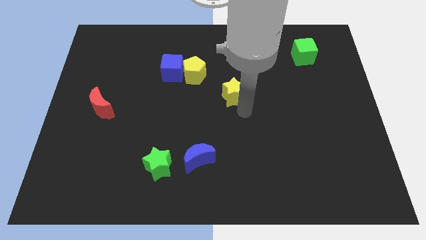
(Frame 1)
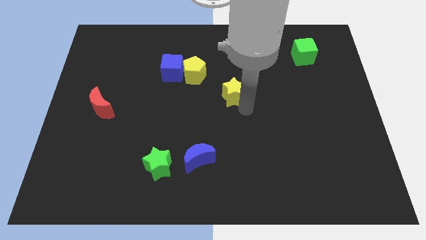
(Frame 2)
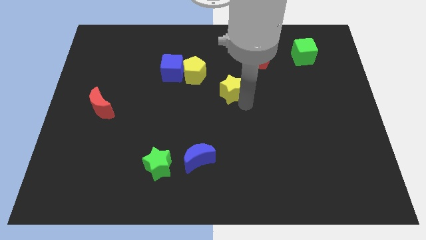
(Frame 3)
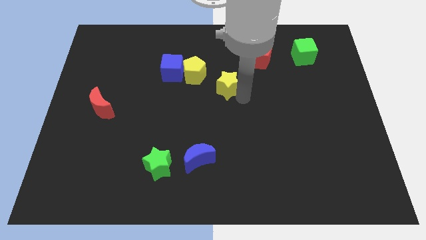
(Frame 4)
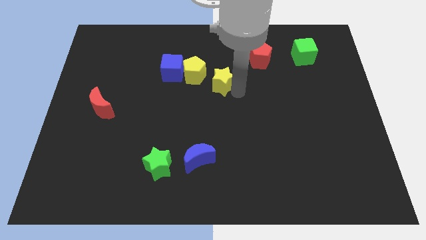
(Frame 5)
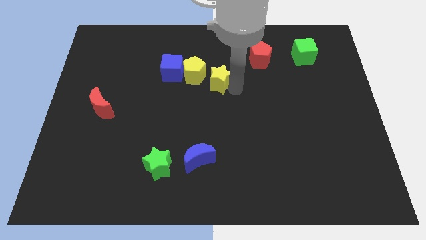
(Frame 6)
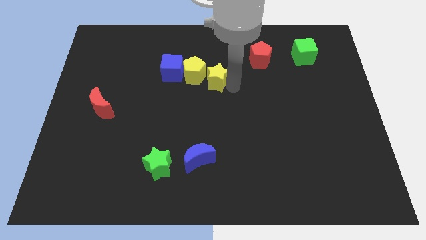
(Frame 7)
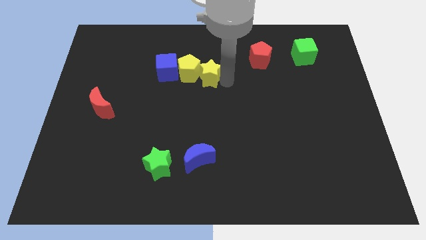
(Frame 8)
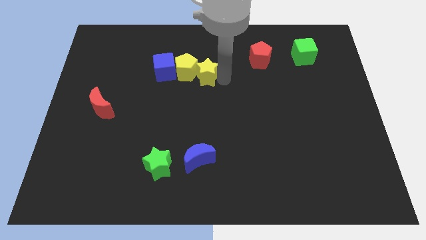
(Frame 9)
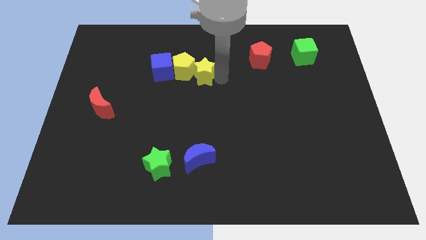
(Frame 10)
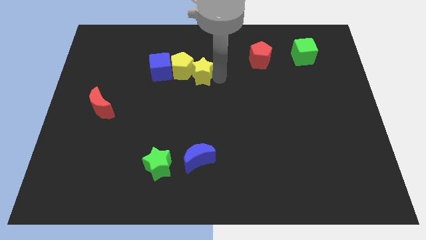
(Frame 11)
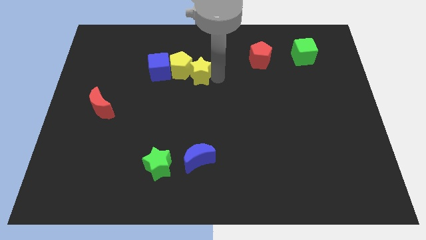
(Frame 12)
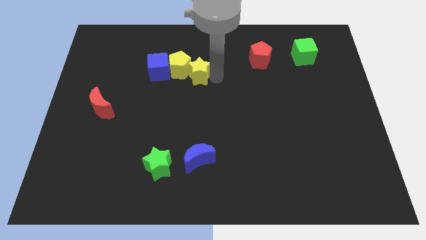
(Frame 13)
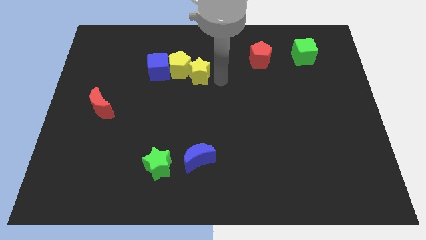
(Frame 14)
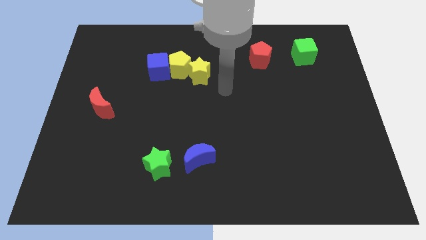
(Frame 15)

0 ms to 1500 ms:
place a yellow star close to the yellow pentagon

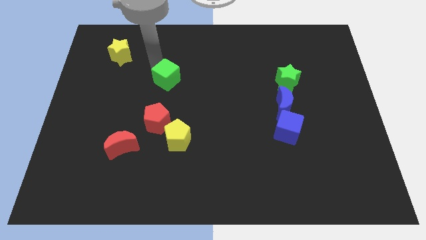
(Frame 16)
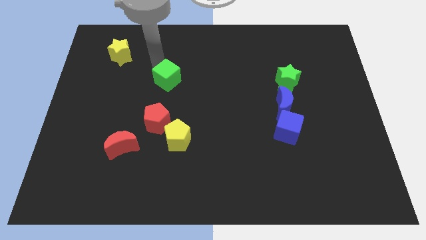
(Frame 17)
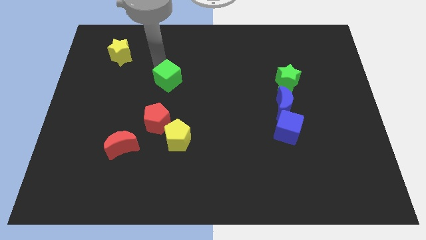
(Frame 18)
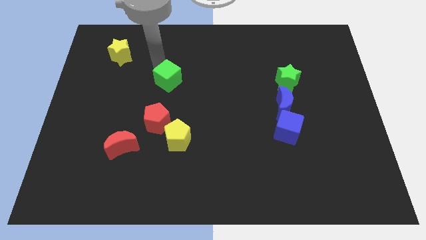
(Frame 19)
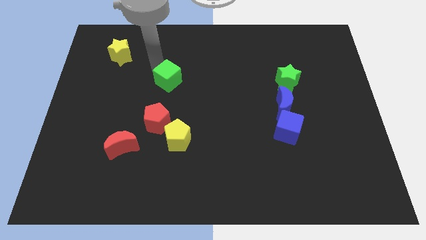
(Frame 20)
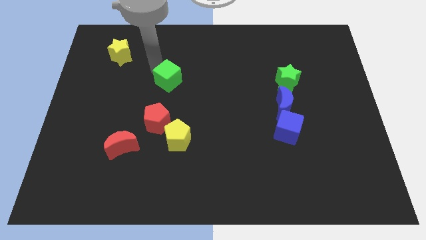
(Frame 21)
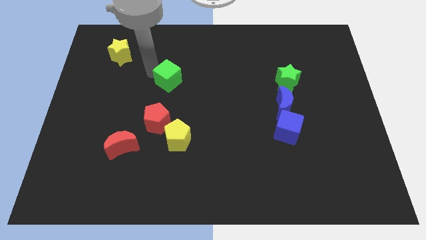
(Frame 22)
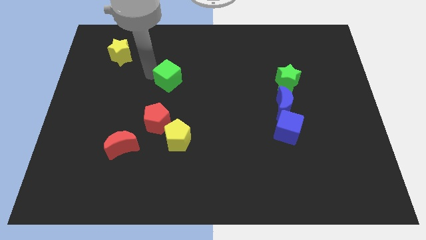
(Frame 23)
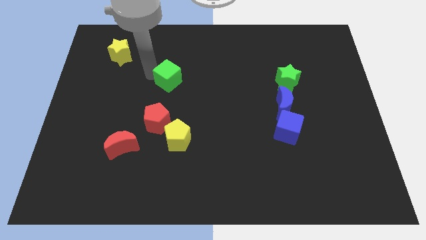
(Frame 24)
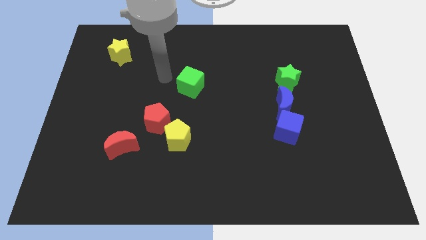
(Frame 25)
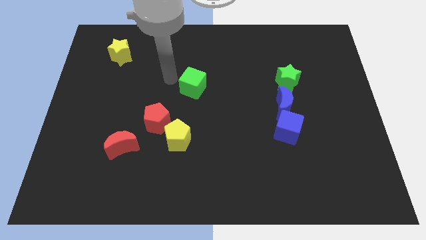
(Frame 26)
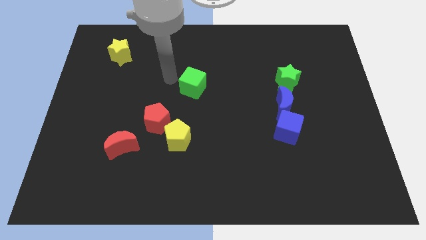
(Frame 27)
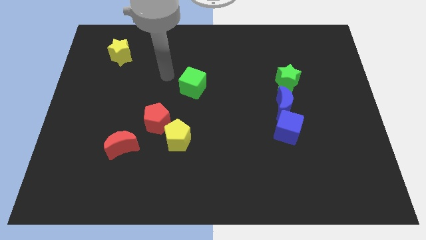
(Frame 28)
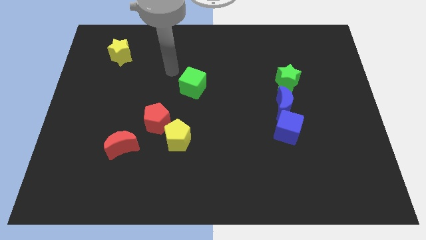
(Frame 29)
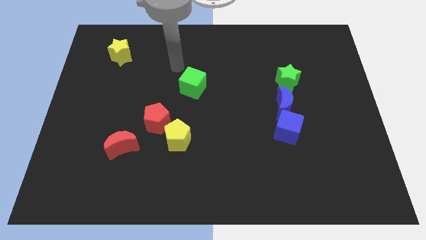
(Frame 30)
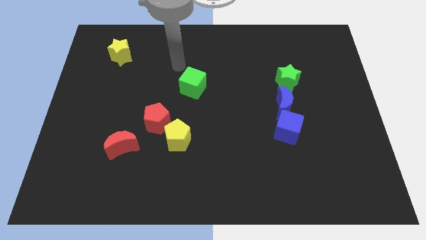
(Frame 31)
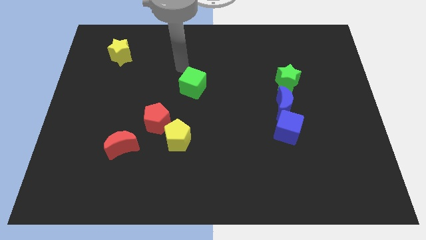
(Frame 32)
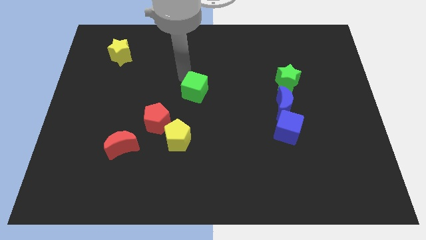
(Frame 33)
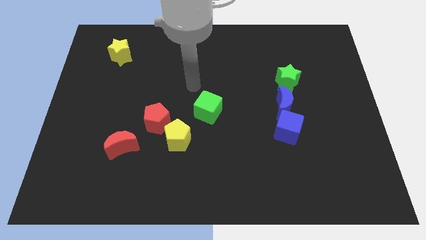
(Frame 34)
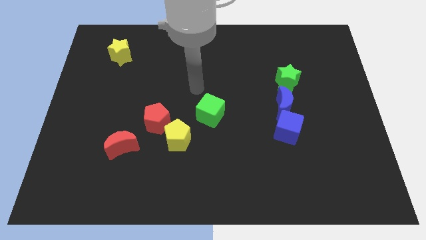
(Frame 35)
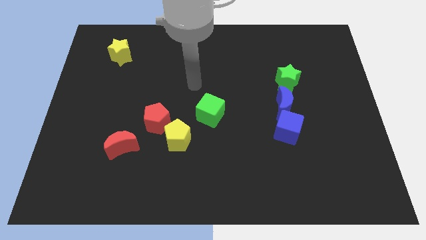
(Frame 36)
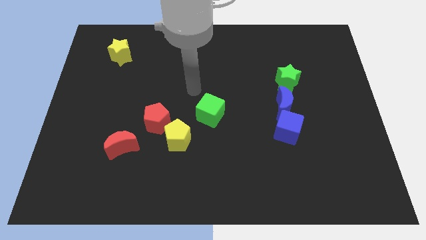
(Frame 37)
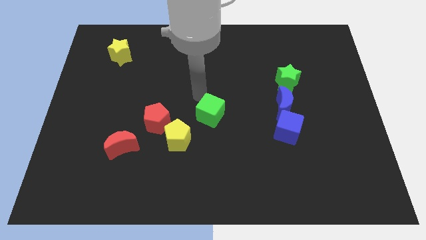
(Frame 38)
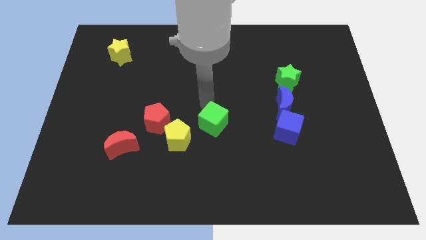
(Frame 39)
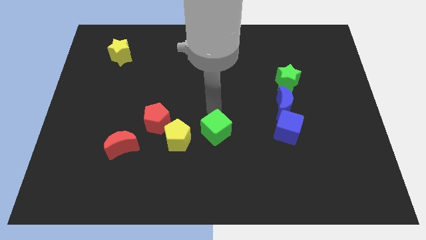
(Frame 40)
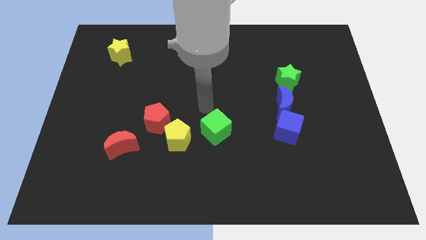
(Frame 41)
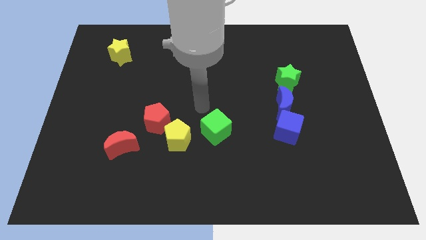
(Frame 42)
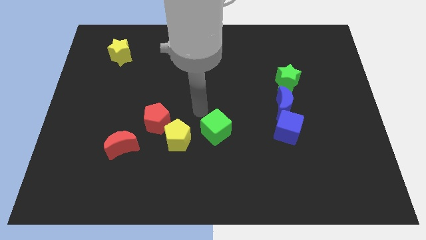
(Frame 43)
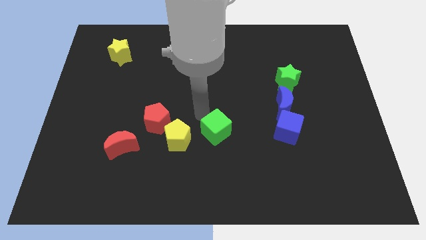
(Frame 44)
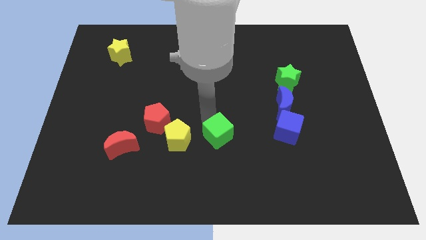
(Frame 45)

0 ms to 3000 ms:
place the green cube right to the yellow pentagon

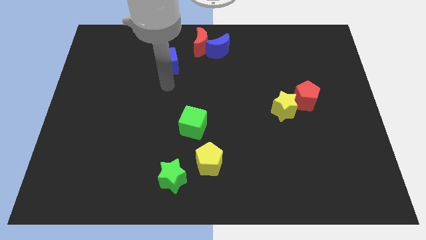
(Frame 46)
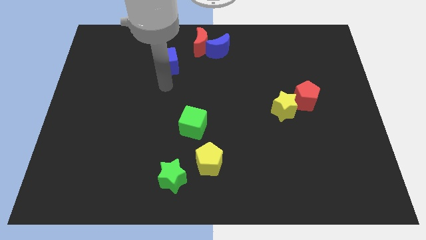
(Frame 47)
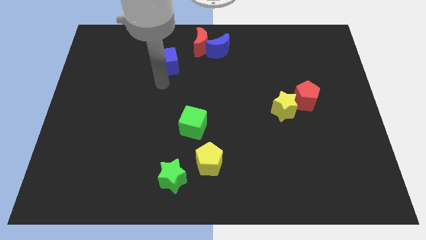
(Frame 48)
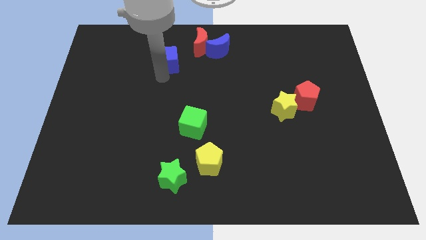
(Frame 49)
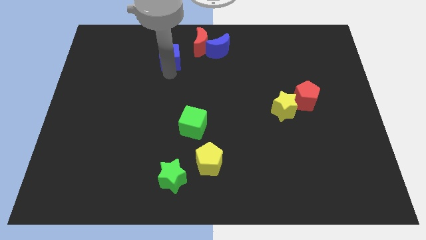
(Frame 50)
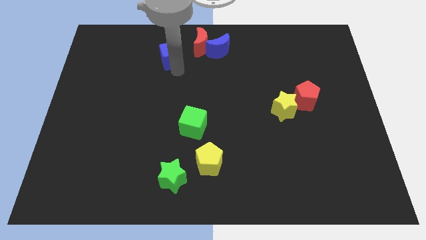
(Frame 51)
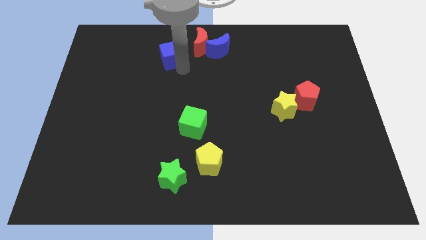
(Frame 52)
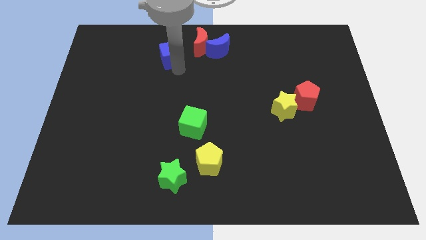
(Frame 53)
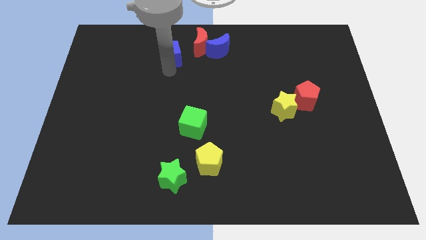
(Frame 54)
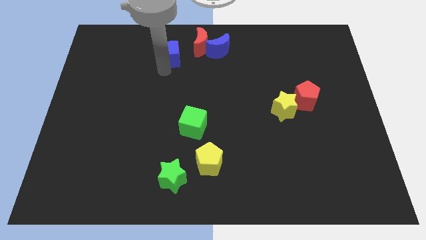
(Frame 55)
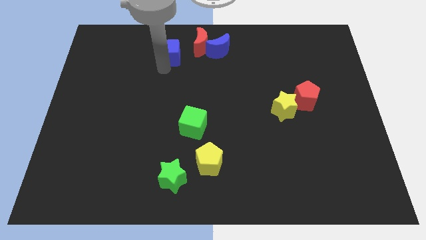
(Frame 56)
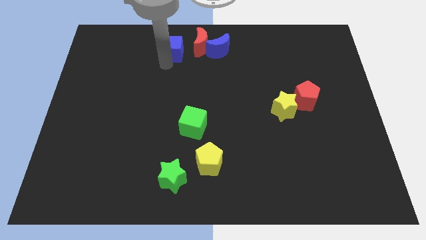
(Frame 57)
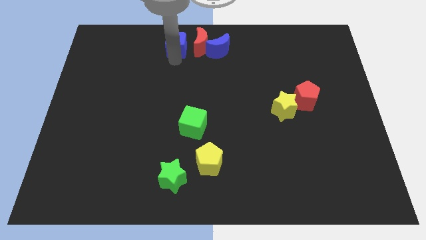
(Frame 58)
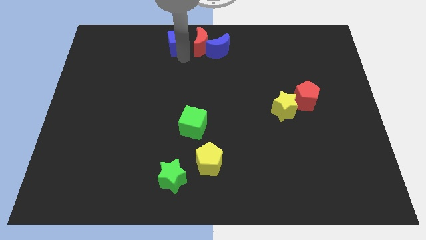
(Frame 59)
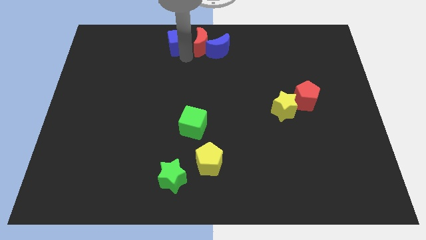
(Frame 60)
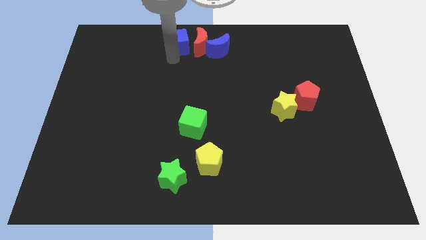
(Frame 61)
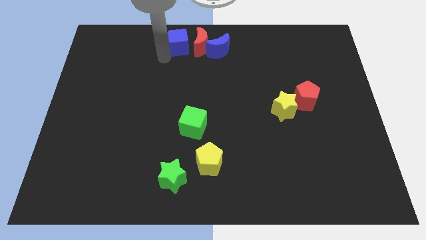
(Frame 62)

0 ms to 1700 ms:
place the blue cube to the left side of red moon

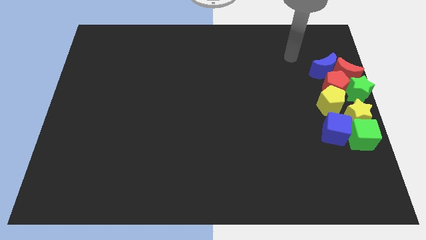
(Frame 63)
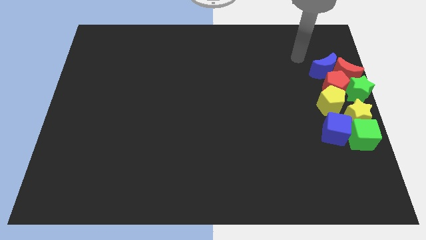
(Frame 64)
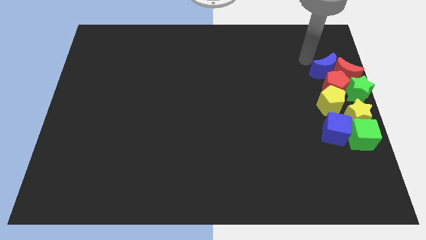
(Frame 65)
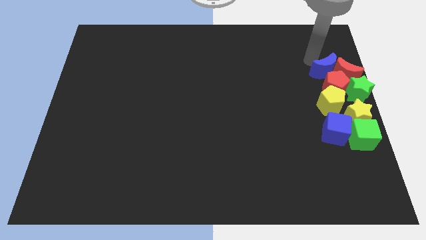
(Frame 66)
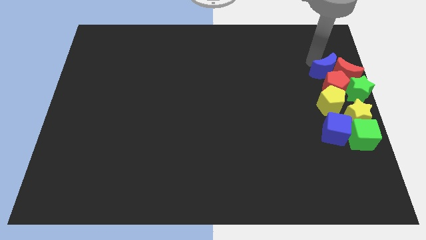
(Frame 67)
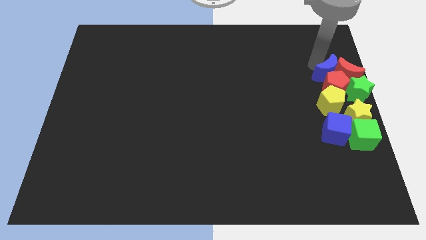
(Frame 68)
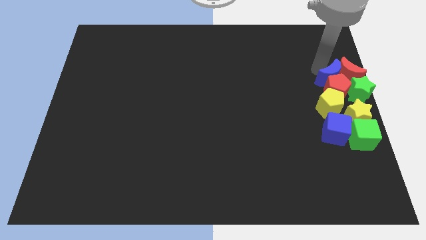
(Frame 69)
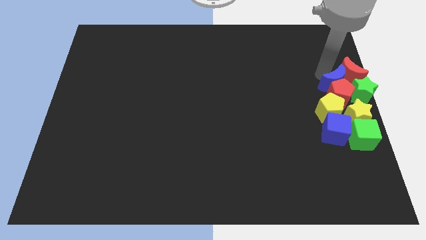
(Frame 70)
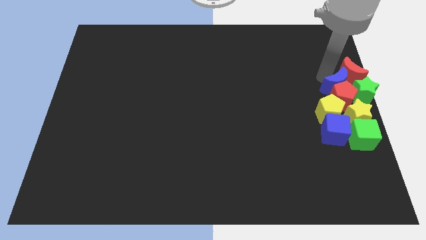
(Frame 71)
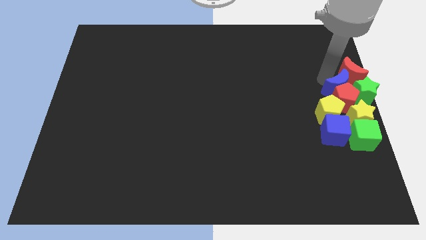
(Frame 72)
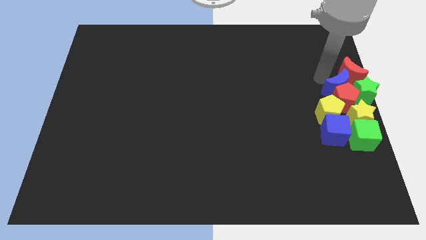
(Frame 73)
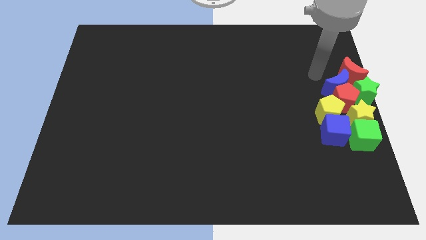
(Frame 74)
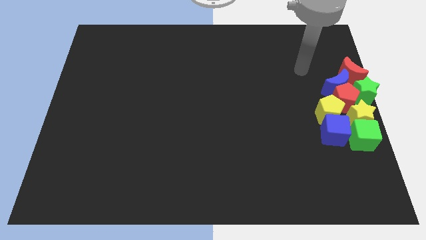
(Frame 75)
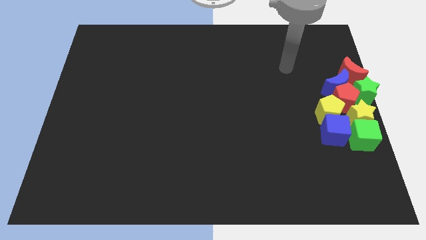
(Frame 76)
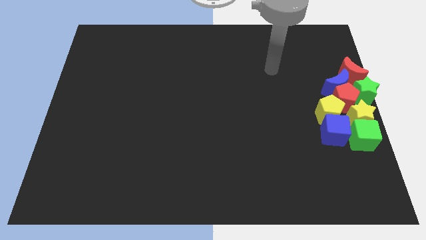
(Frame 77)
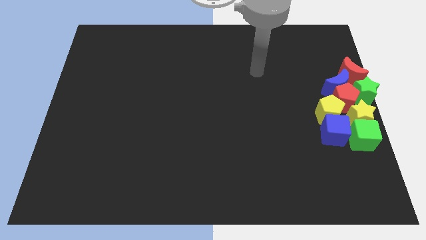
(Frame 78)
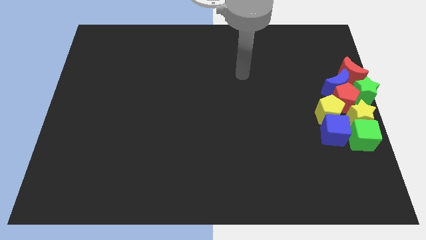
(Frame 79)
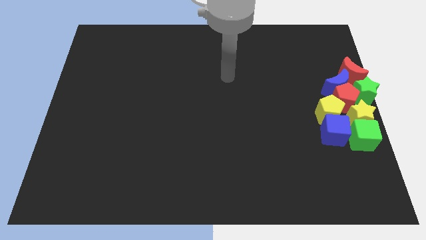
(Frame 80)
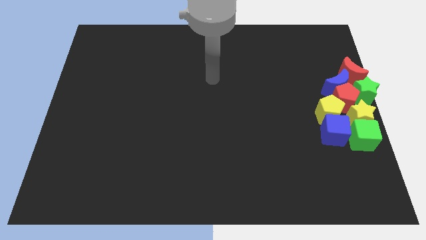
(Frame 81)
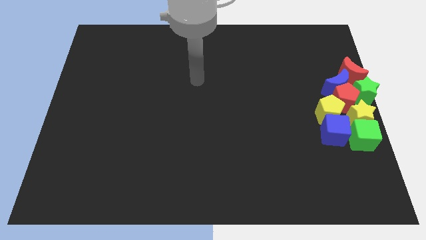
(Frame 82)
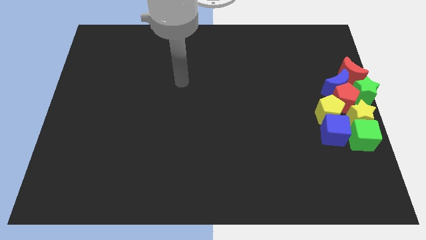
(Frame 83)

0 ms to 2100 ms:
group up all the blocks

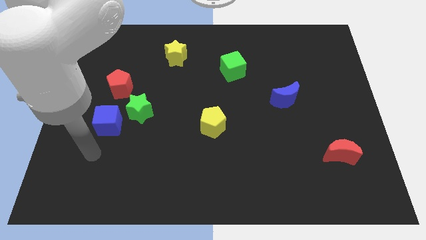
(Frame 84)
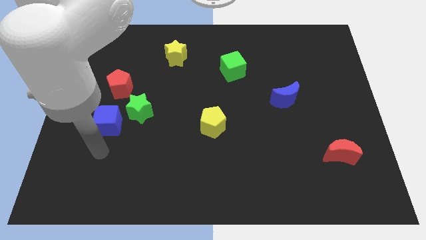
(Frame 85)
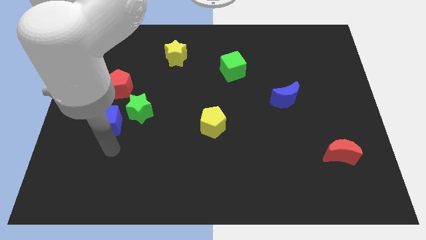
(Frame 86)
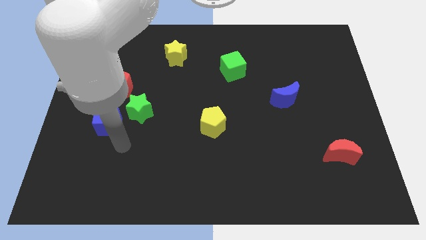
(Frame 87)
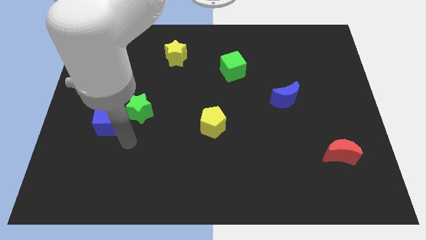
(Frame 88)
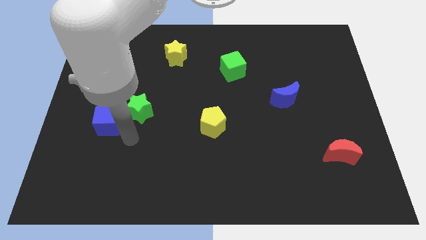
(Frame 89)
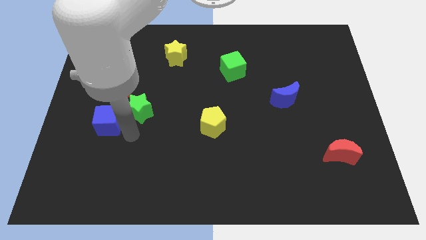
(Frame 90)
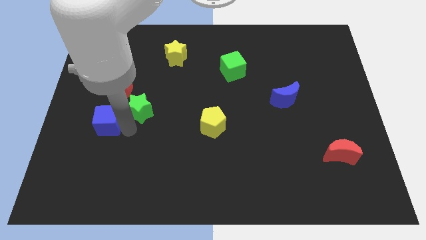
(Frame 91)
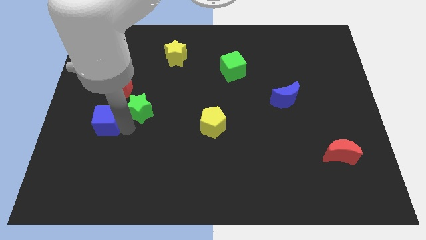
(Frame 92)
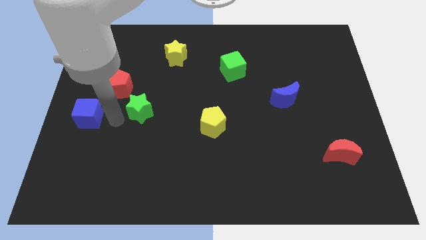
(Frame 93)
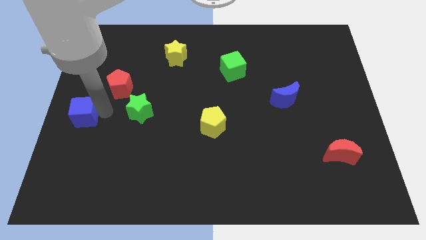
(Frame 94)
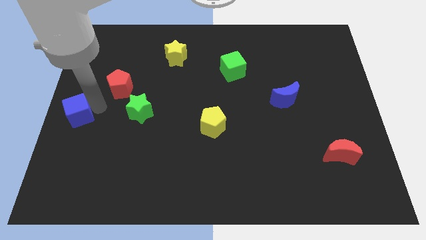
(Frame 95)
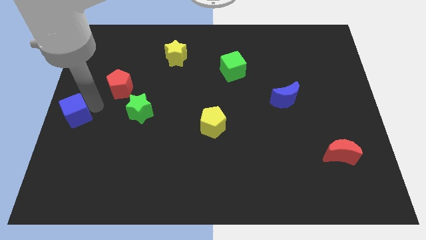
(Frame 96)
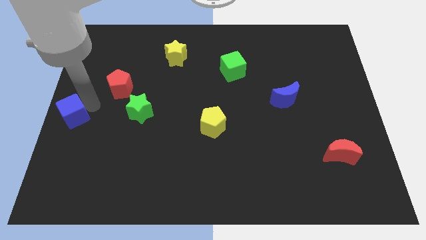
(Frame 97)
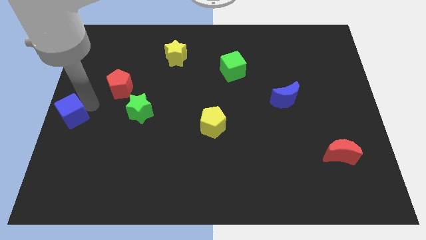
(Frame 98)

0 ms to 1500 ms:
push the blue cube to the left side of the board
